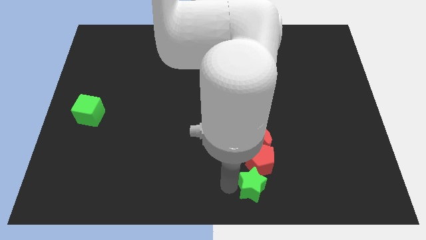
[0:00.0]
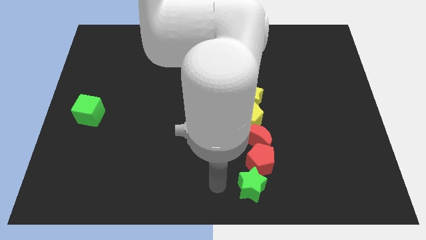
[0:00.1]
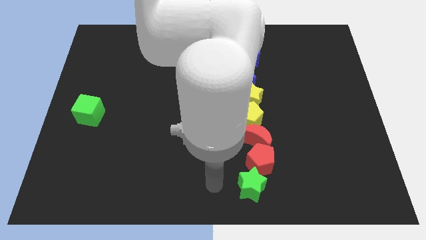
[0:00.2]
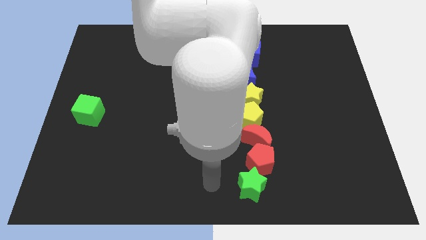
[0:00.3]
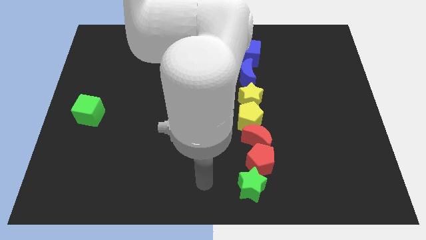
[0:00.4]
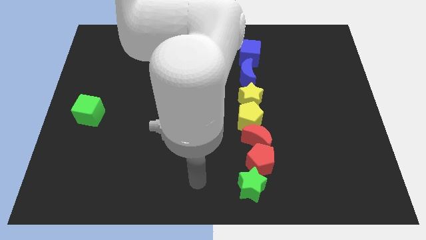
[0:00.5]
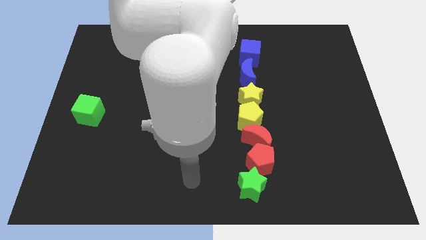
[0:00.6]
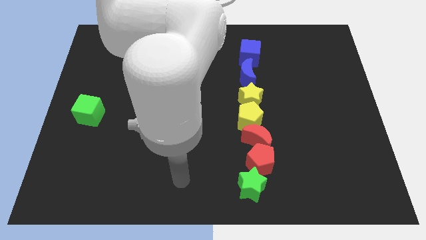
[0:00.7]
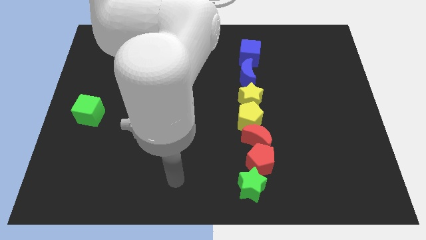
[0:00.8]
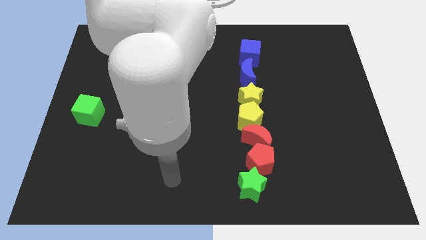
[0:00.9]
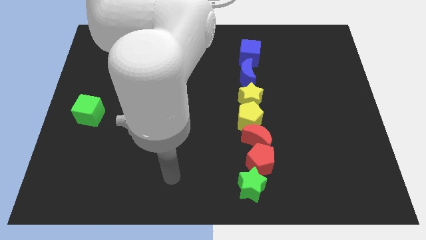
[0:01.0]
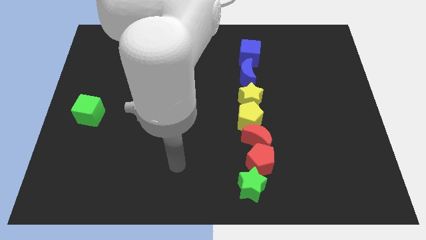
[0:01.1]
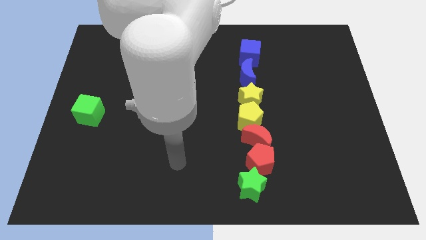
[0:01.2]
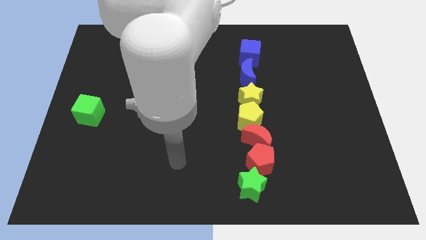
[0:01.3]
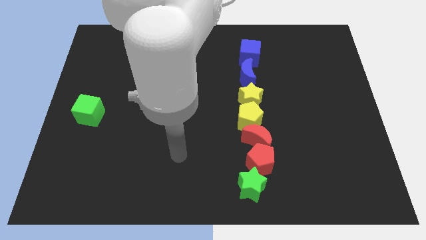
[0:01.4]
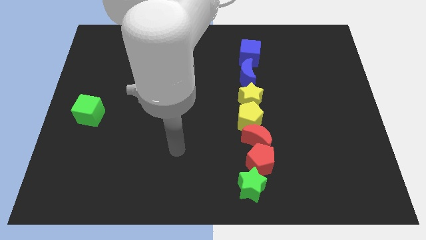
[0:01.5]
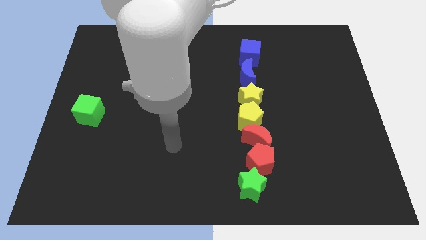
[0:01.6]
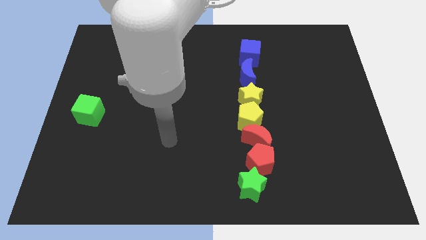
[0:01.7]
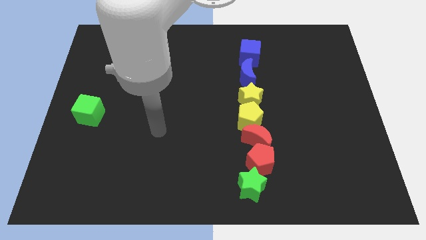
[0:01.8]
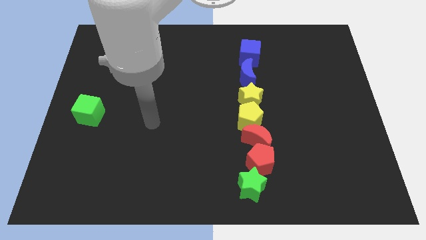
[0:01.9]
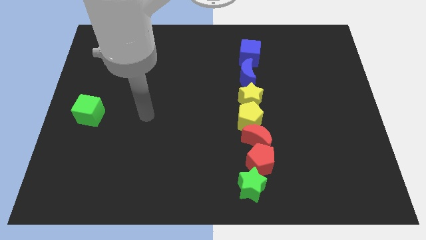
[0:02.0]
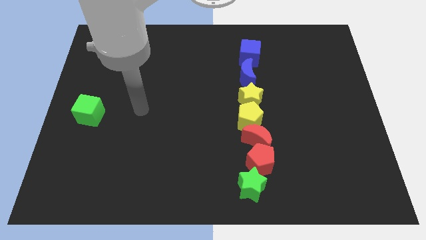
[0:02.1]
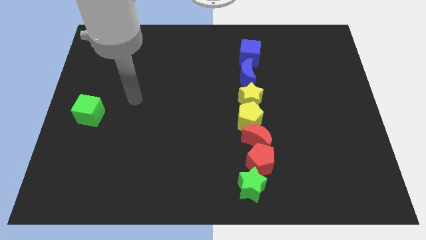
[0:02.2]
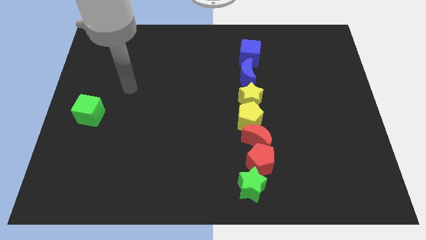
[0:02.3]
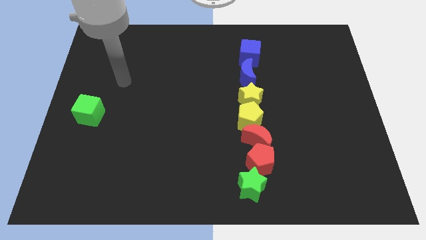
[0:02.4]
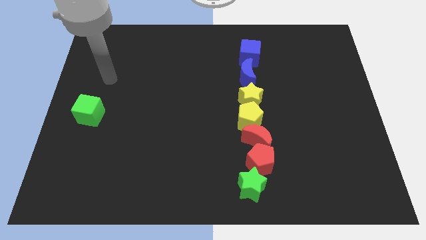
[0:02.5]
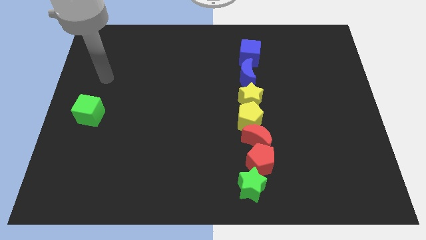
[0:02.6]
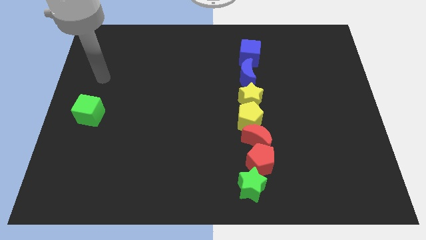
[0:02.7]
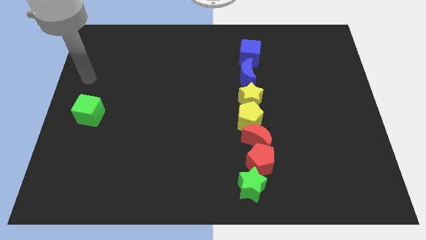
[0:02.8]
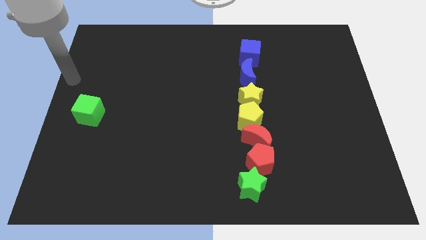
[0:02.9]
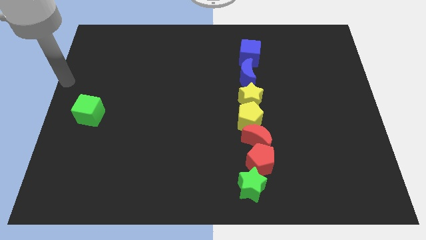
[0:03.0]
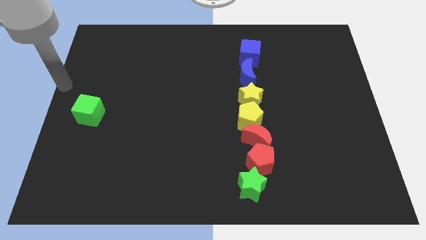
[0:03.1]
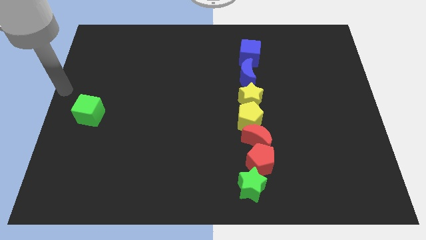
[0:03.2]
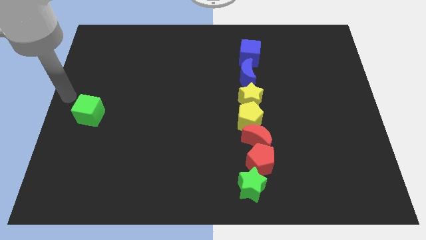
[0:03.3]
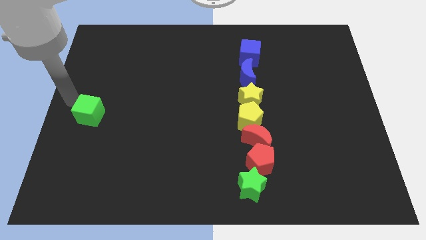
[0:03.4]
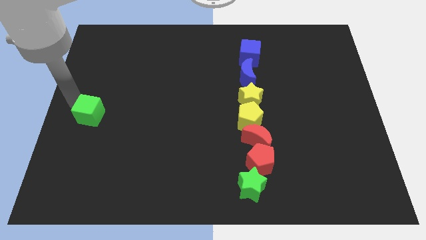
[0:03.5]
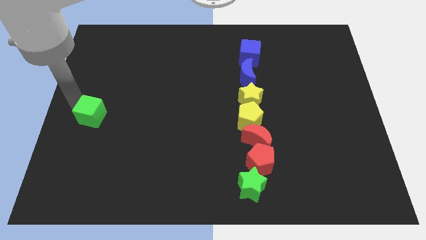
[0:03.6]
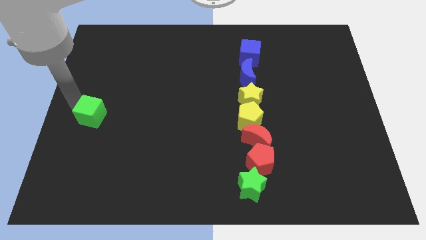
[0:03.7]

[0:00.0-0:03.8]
tap the left side of the green cube

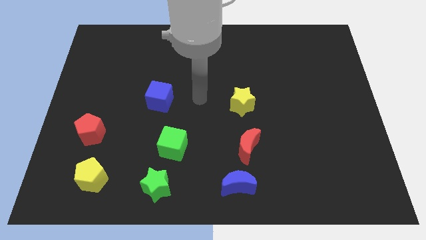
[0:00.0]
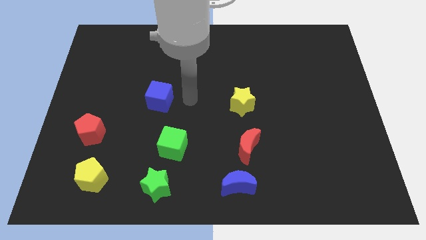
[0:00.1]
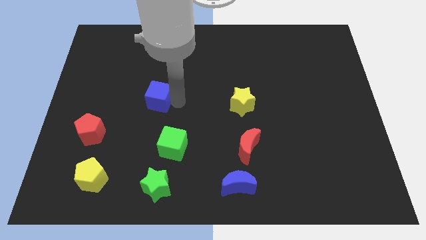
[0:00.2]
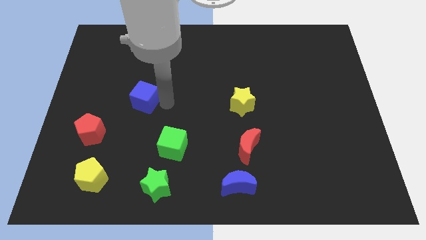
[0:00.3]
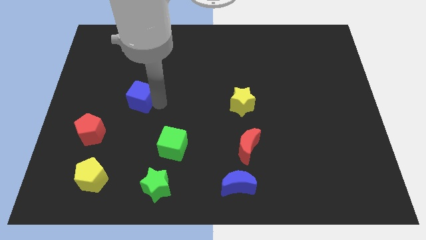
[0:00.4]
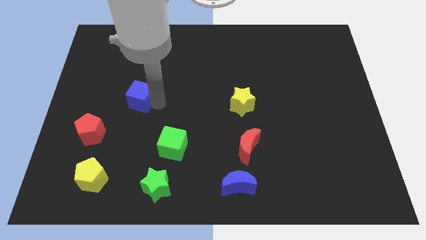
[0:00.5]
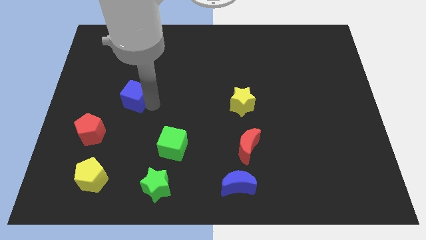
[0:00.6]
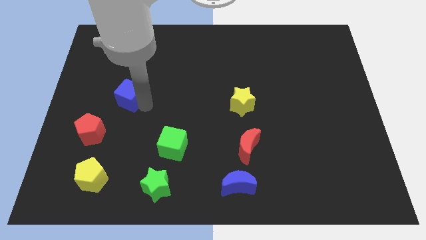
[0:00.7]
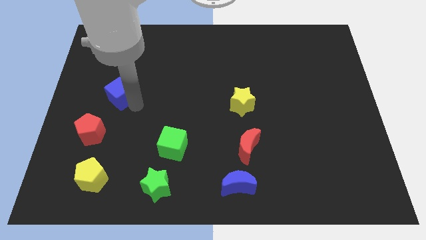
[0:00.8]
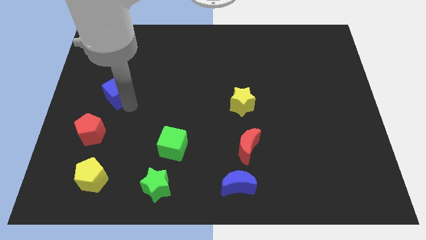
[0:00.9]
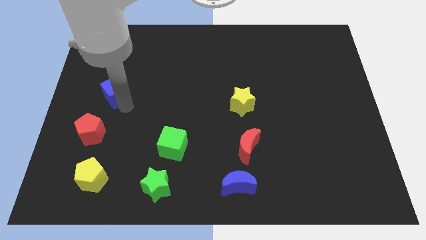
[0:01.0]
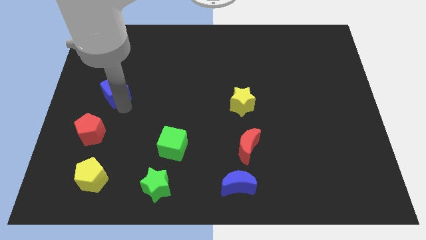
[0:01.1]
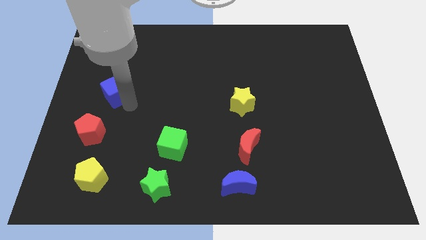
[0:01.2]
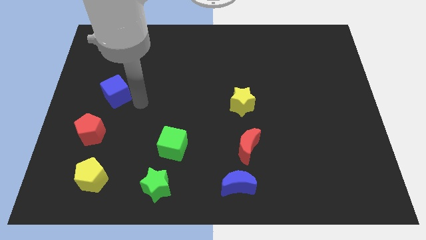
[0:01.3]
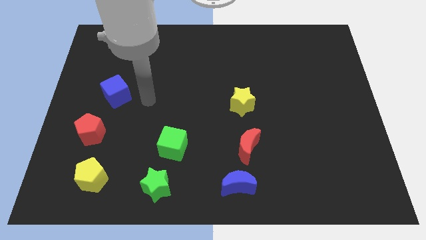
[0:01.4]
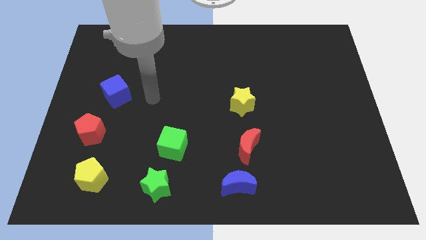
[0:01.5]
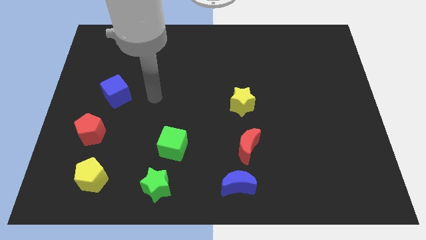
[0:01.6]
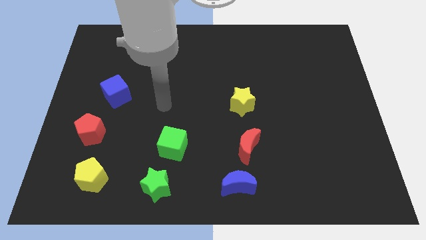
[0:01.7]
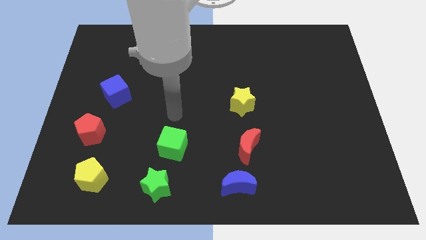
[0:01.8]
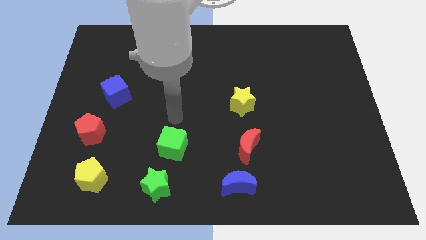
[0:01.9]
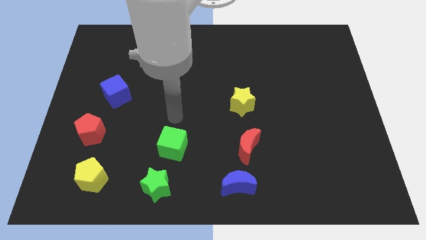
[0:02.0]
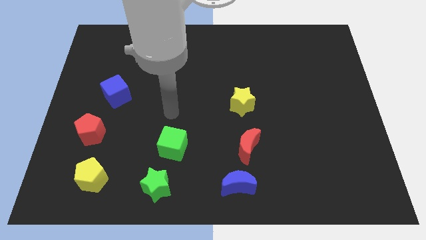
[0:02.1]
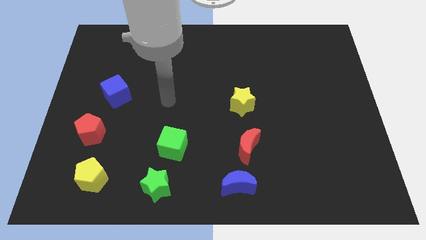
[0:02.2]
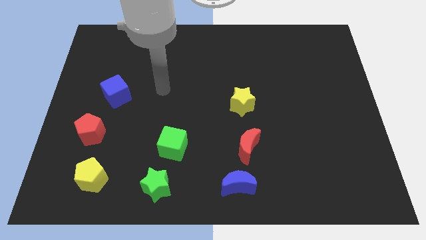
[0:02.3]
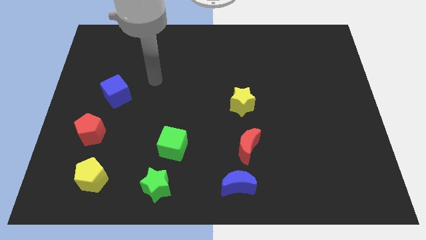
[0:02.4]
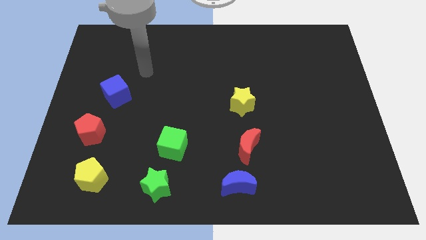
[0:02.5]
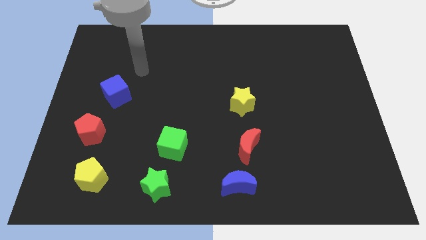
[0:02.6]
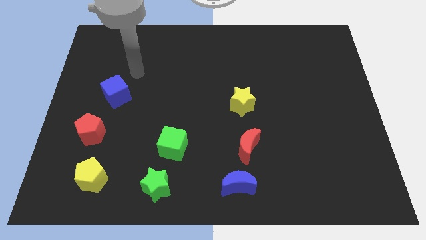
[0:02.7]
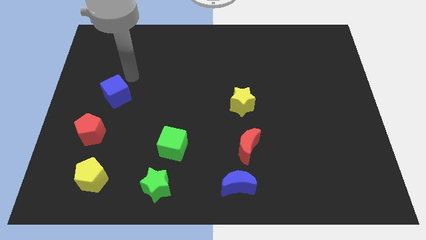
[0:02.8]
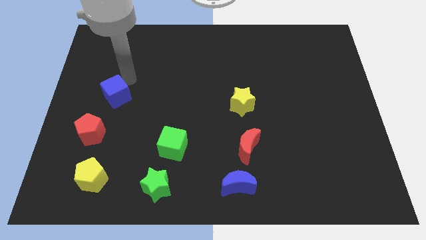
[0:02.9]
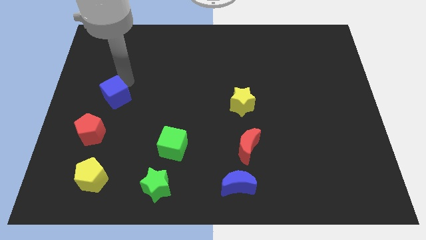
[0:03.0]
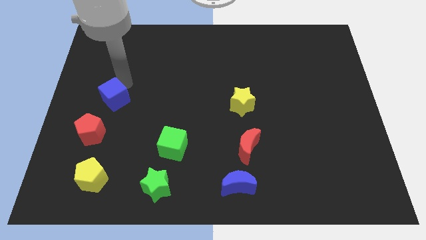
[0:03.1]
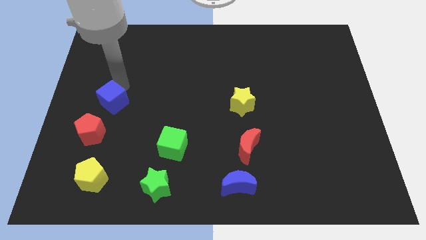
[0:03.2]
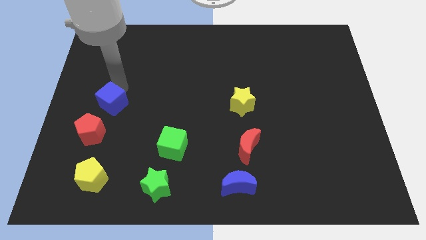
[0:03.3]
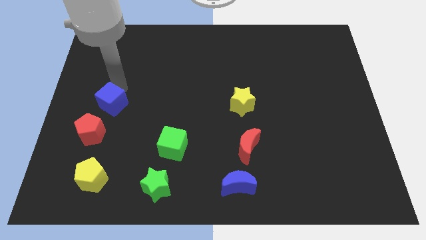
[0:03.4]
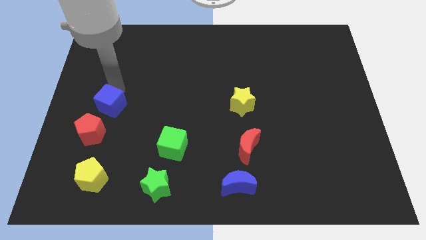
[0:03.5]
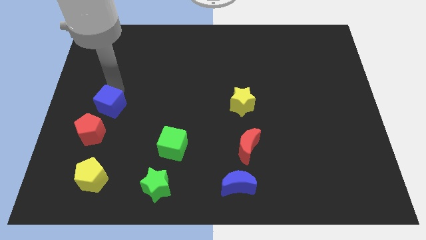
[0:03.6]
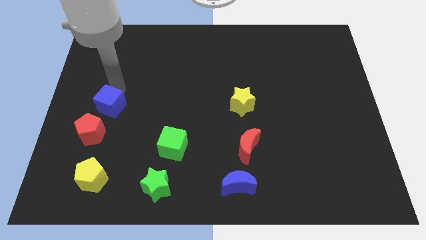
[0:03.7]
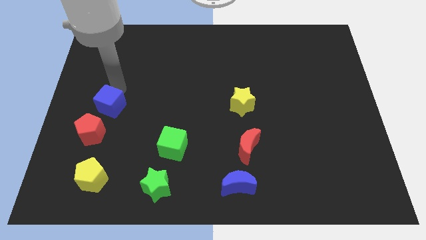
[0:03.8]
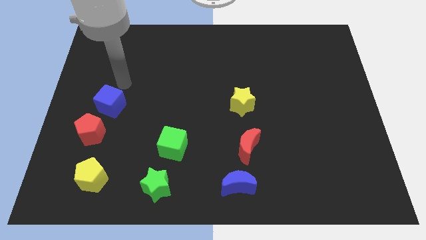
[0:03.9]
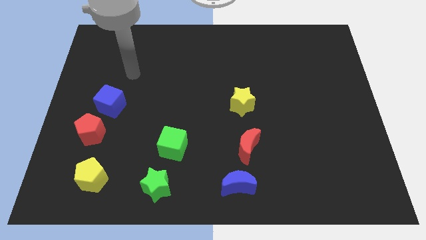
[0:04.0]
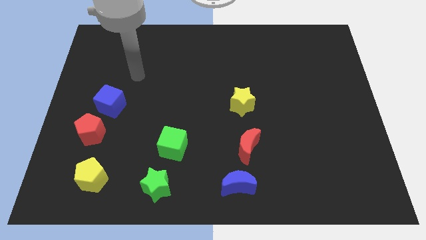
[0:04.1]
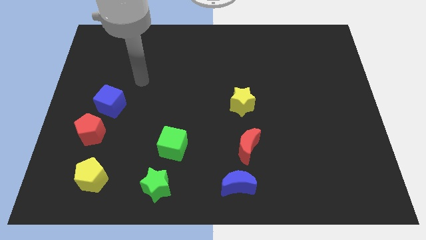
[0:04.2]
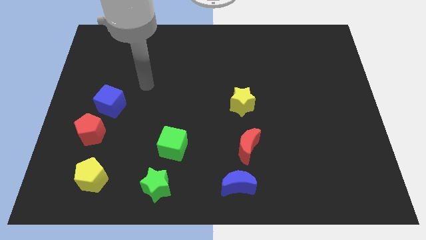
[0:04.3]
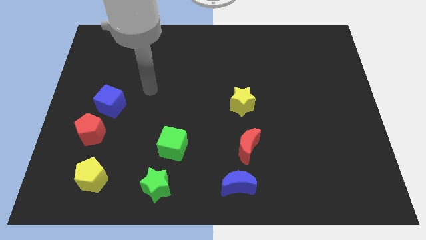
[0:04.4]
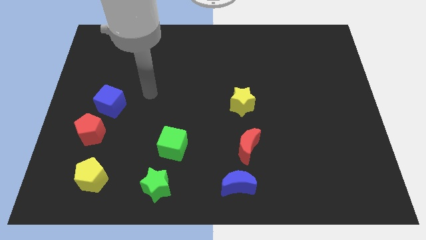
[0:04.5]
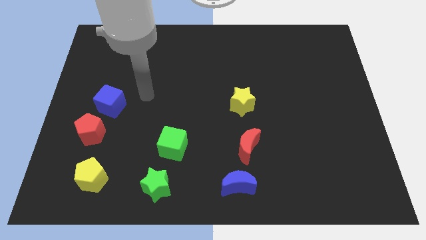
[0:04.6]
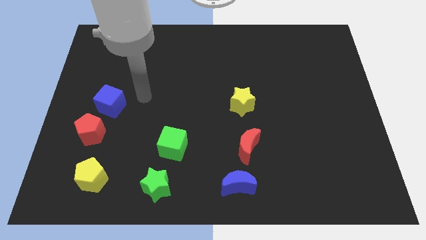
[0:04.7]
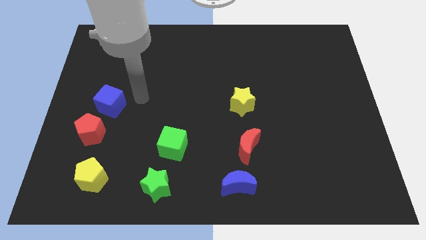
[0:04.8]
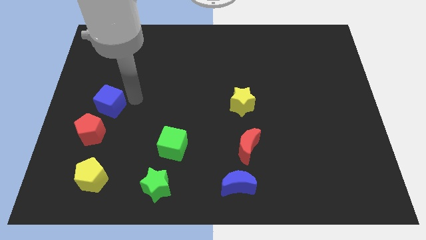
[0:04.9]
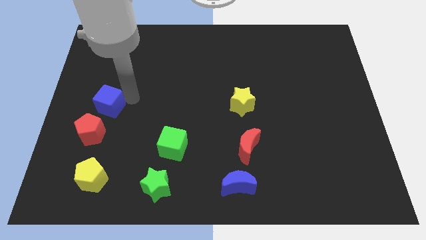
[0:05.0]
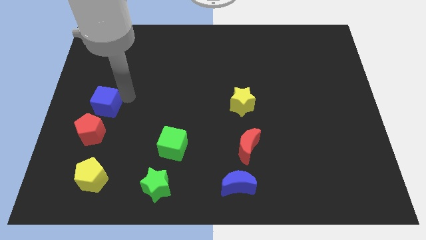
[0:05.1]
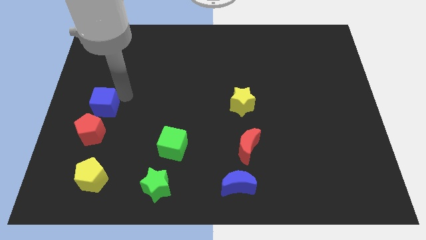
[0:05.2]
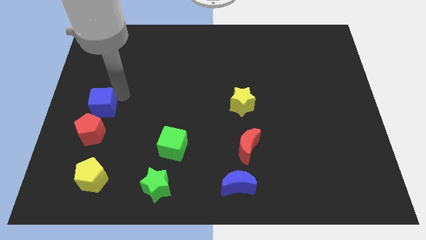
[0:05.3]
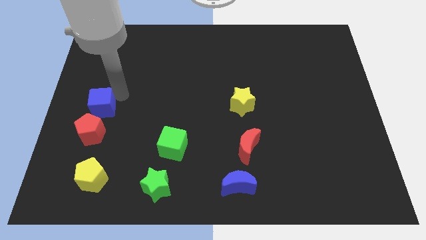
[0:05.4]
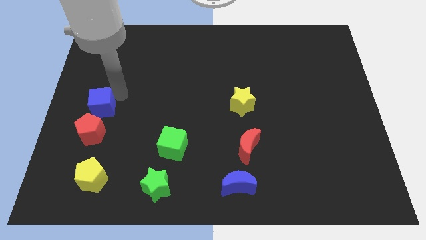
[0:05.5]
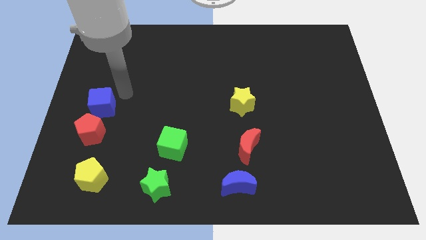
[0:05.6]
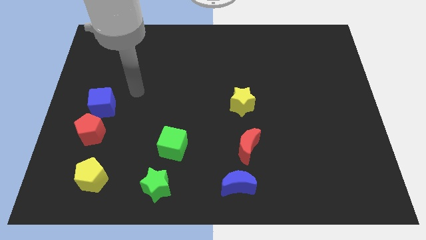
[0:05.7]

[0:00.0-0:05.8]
move the blue cube close to the red pentagon
